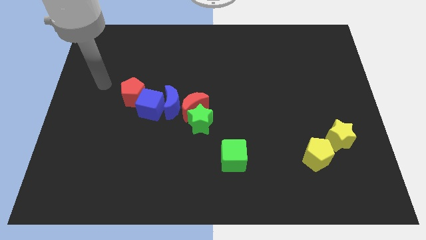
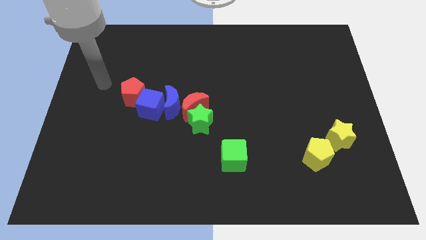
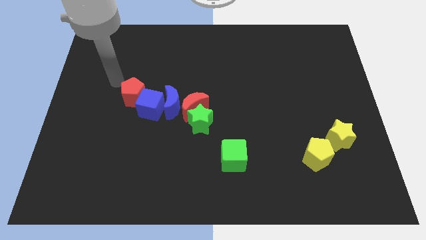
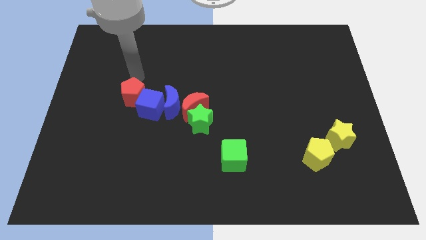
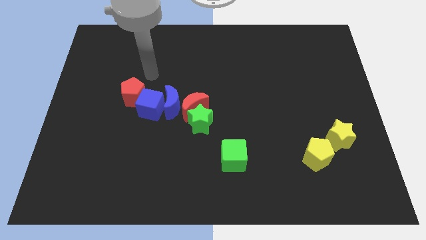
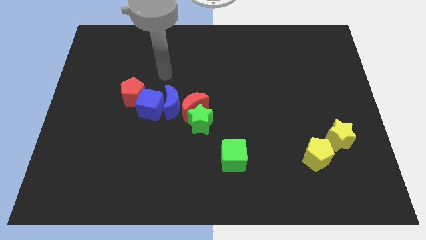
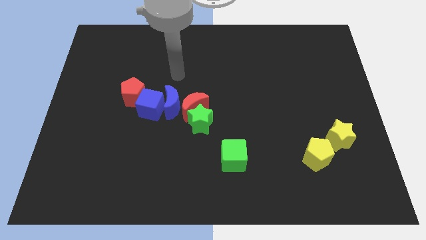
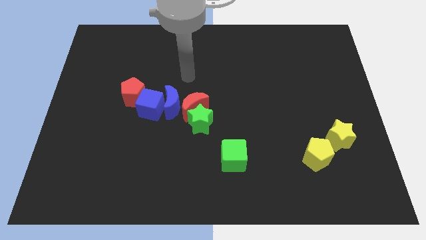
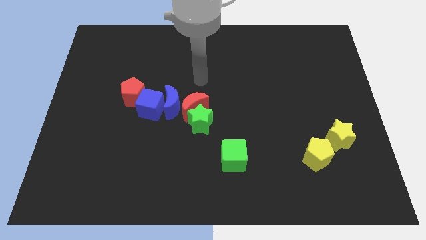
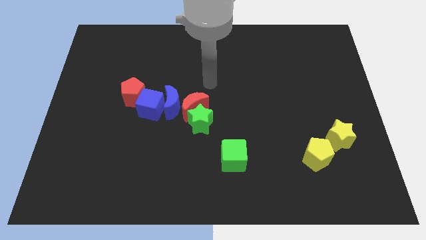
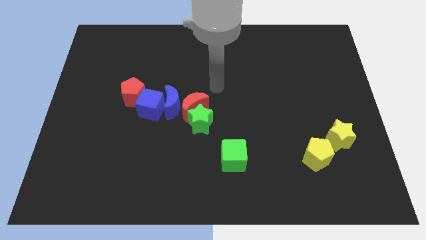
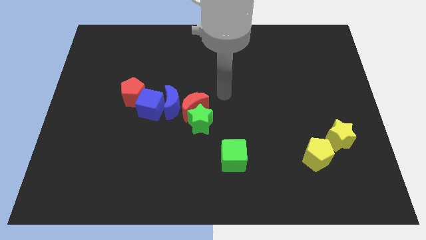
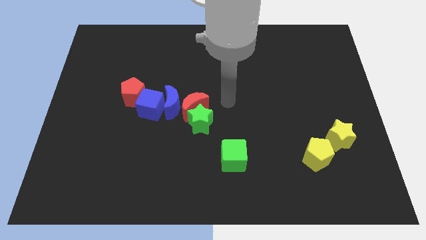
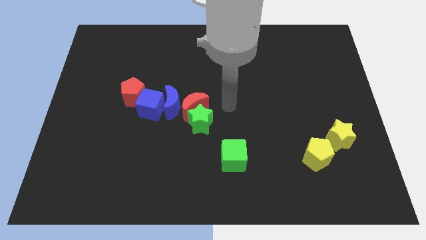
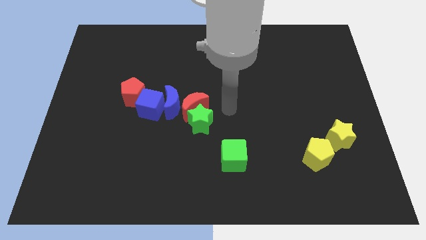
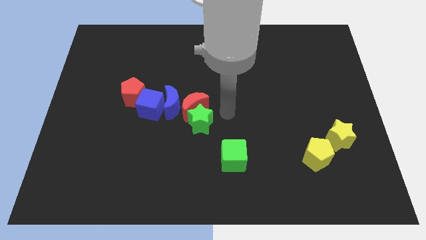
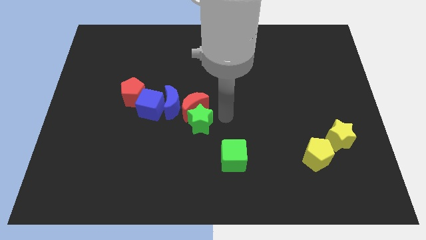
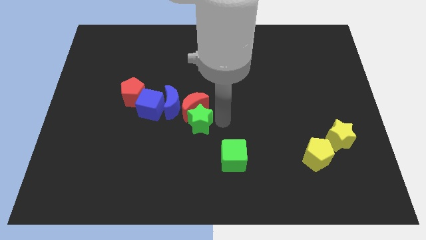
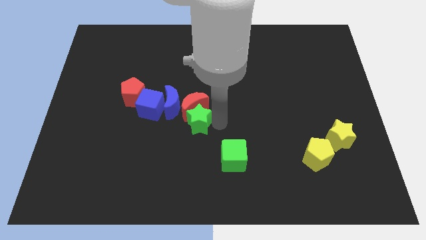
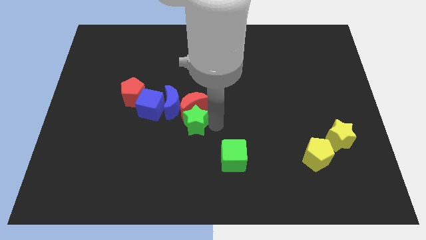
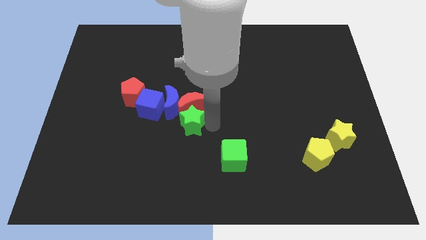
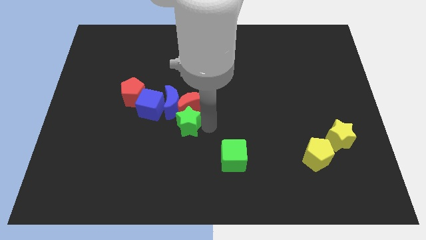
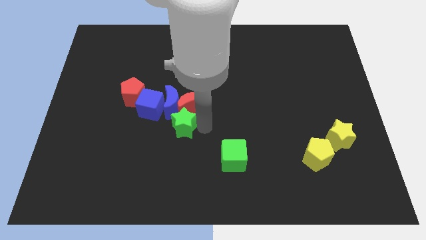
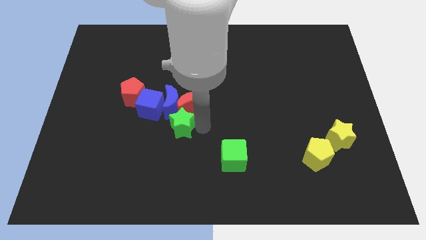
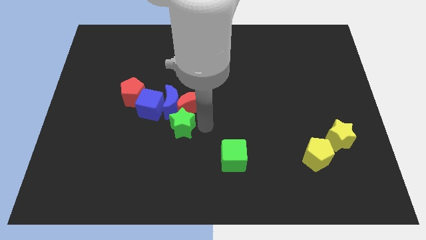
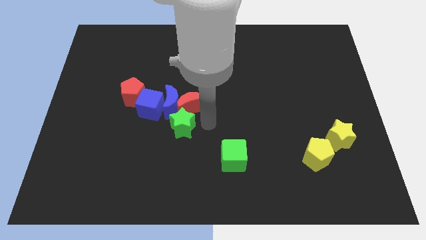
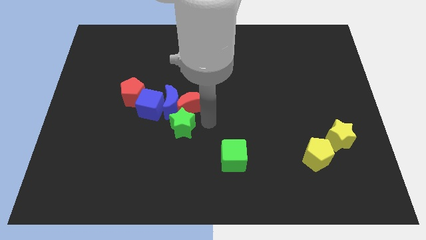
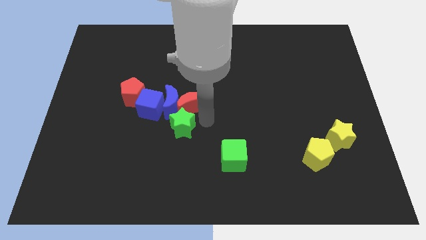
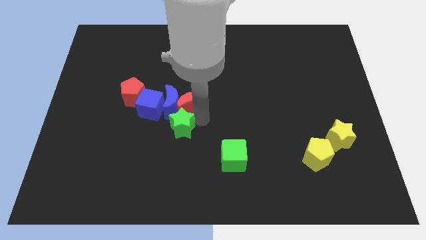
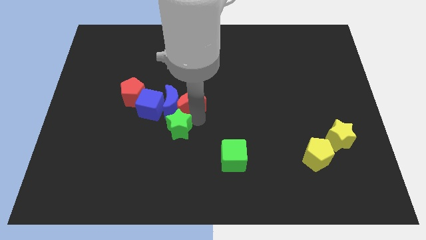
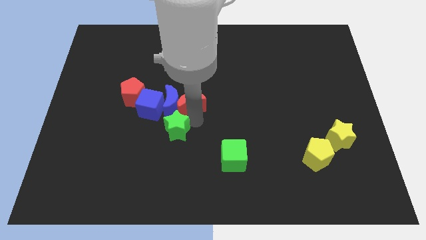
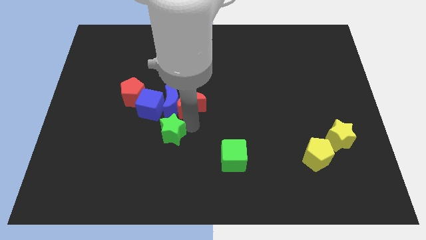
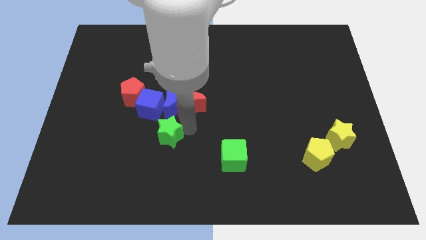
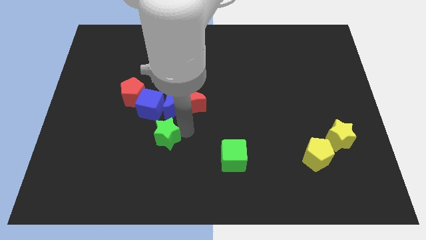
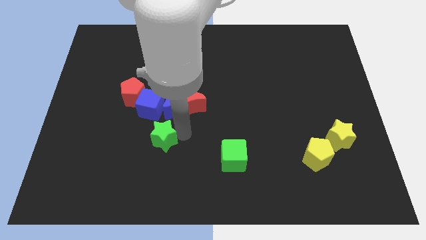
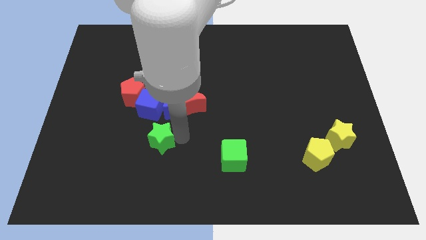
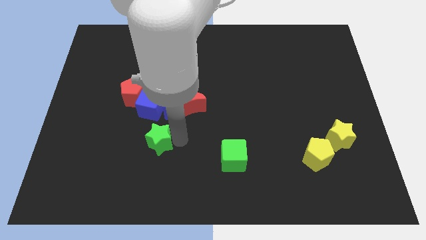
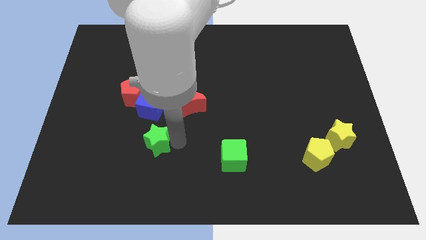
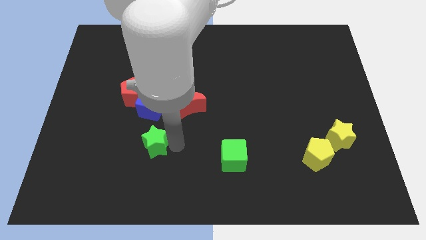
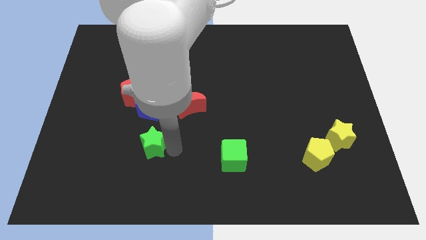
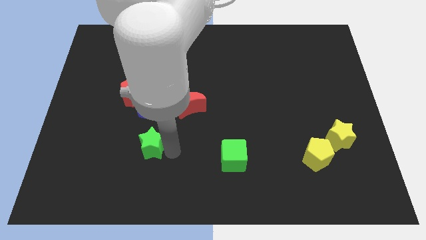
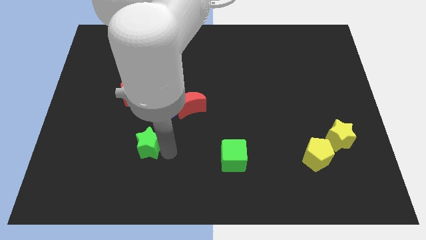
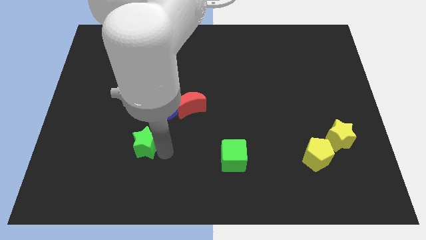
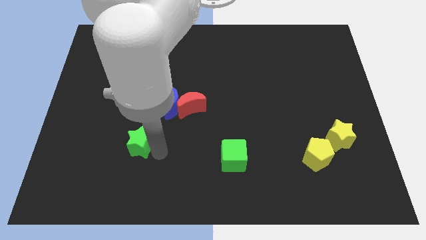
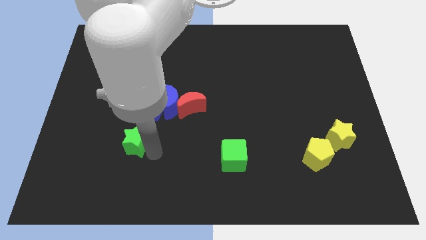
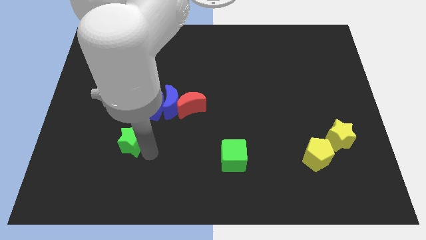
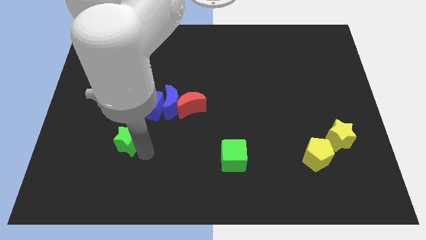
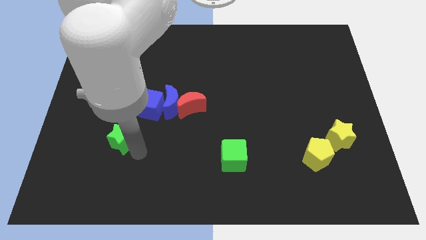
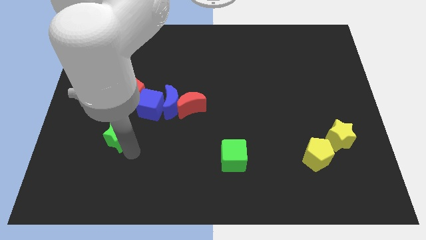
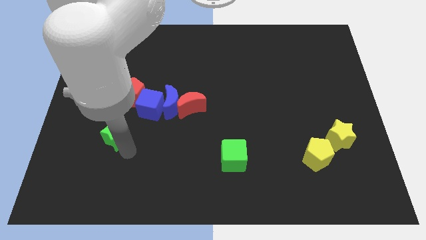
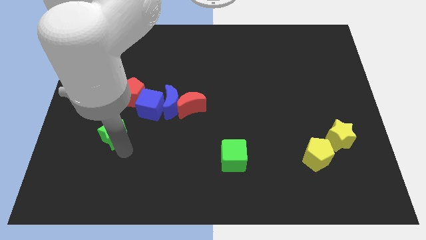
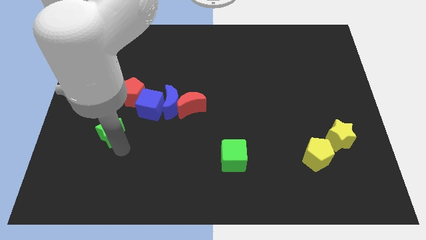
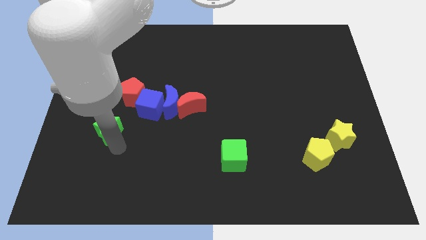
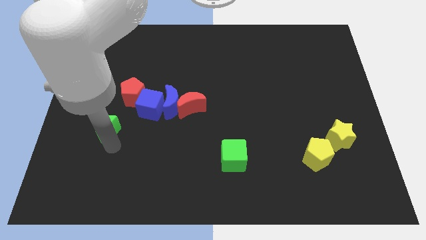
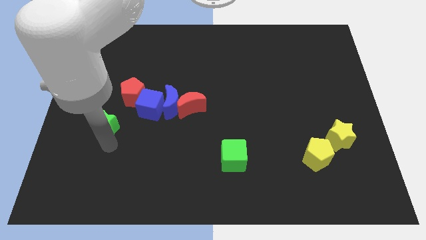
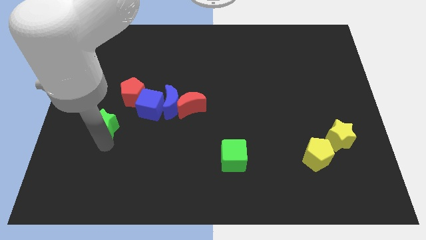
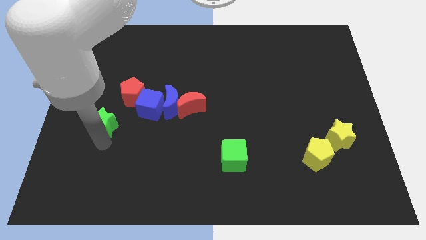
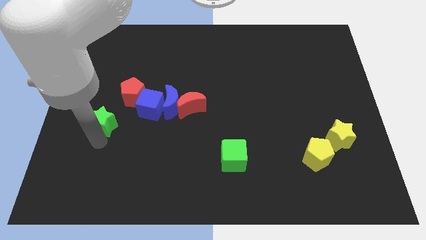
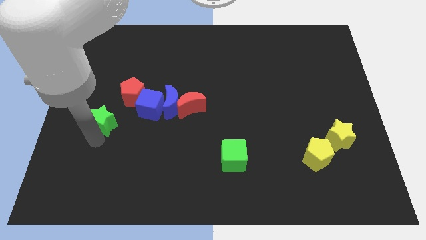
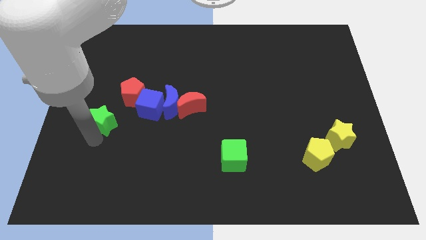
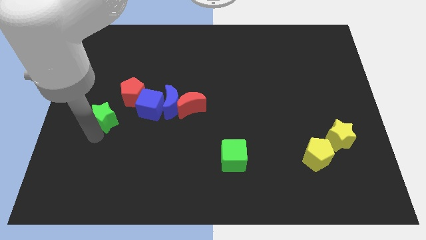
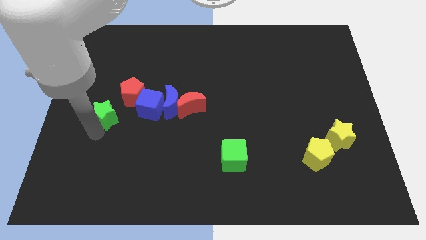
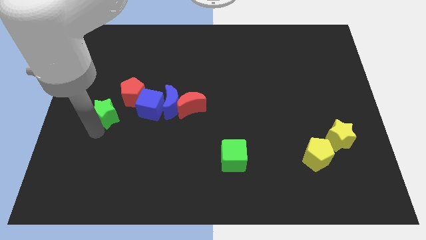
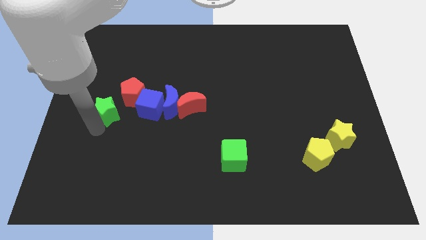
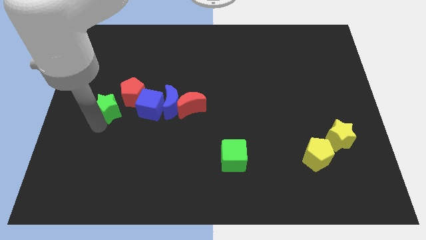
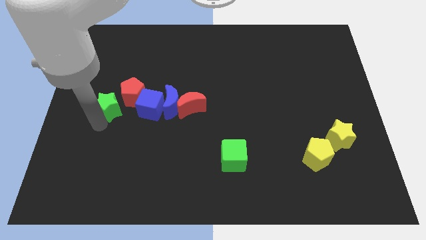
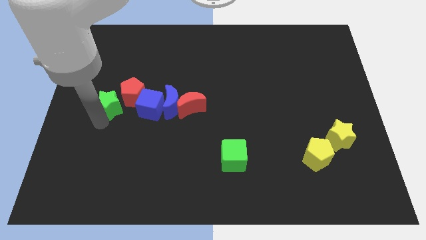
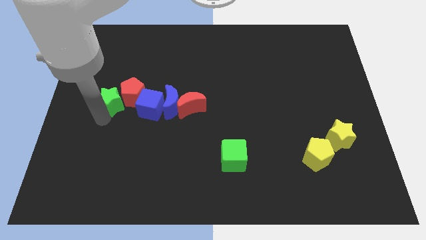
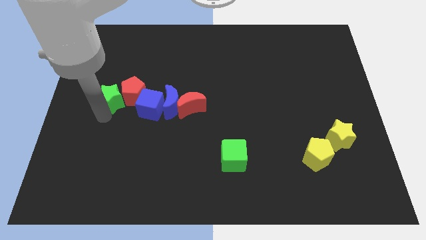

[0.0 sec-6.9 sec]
slide the green star towards the red pentagon

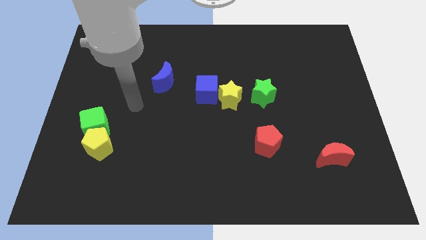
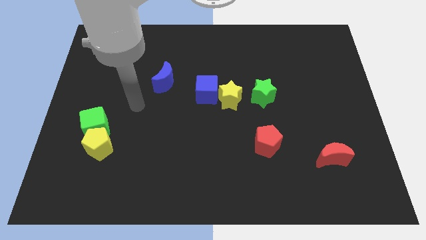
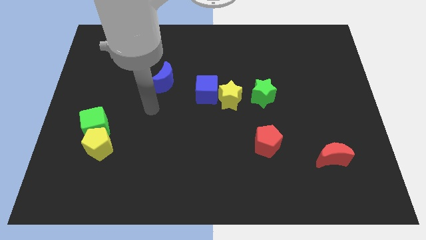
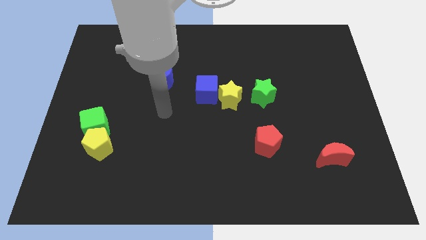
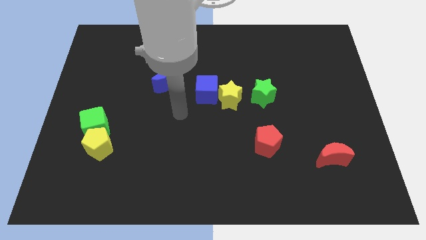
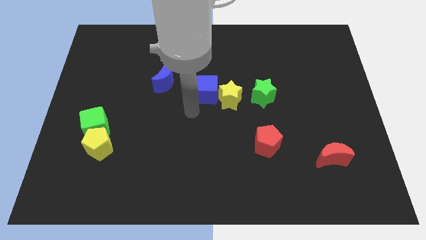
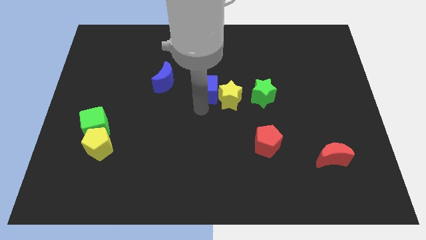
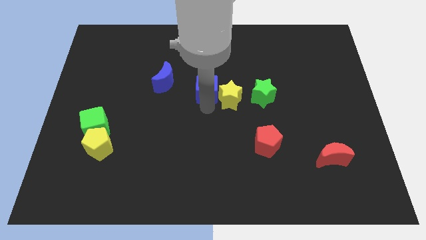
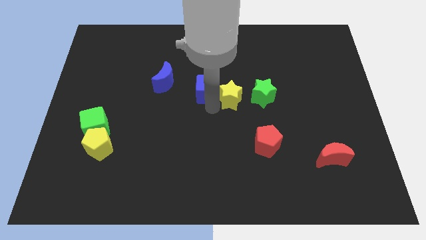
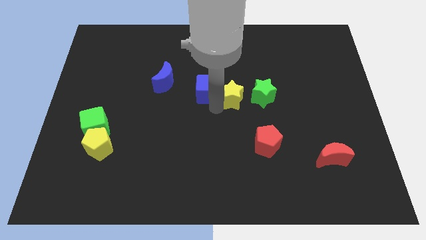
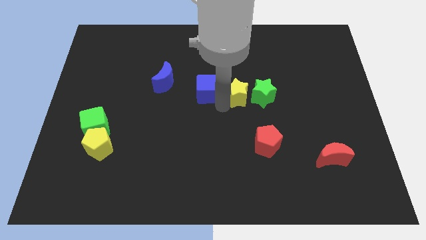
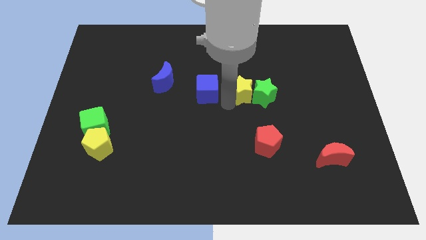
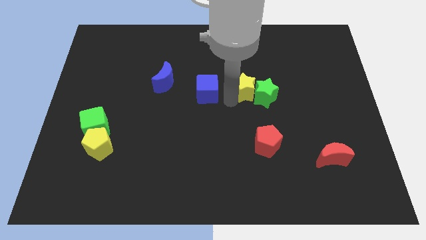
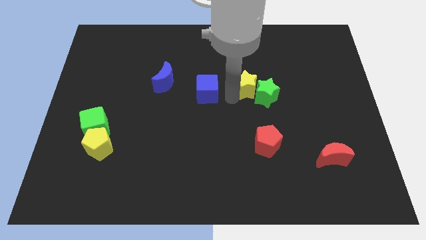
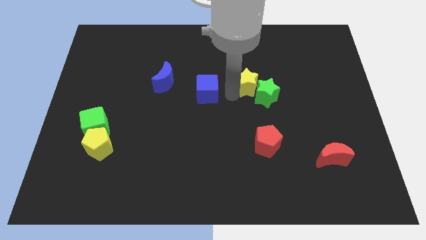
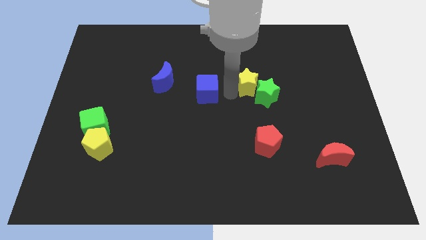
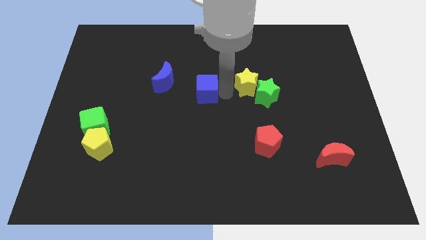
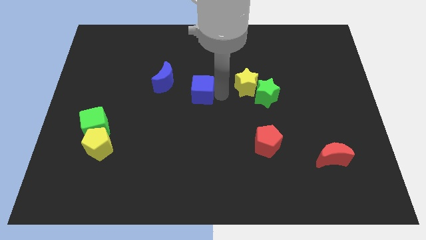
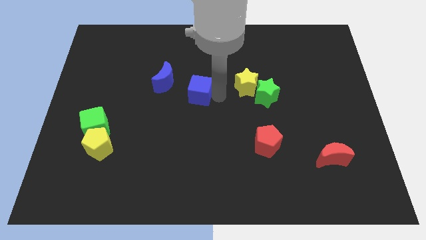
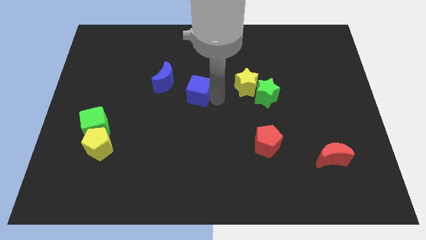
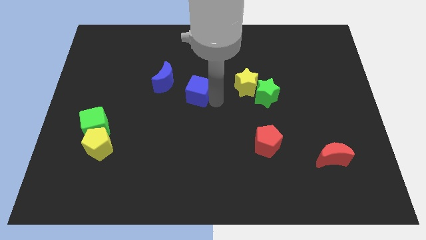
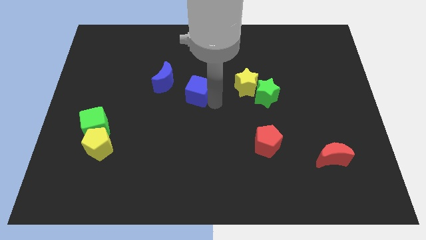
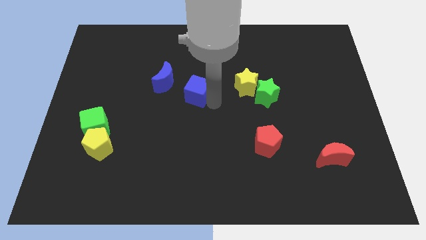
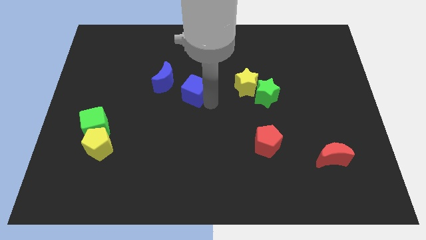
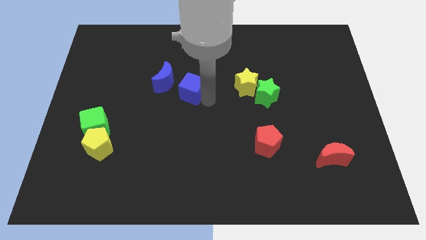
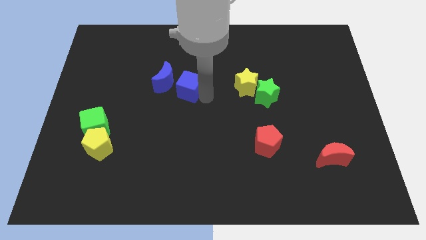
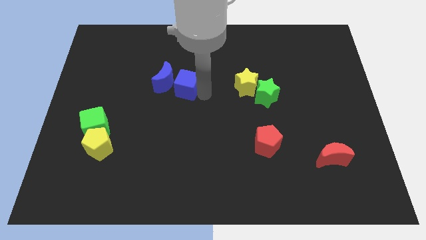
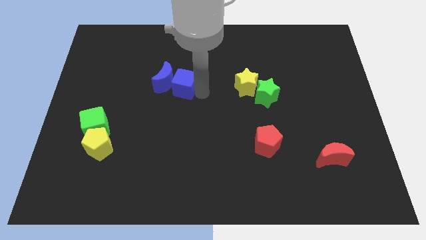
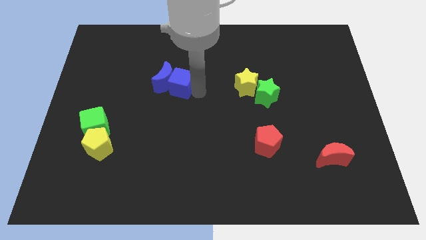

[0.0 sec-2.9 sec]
slide the blue cube next to the blue moon
